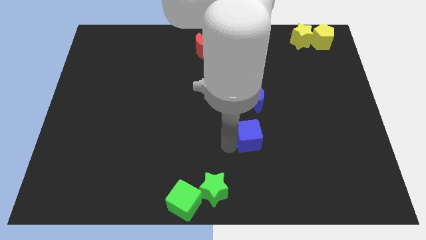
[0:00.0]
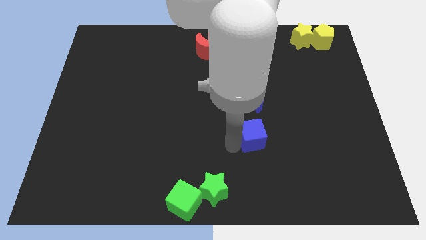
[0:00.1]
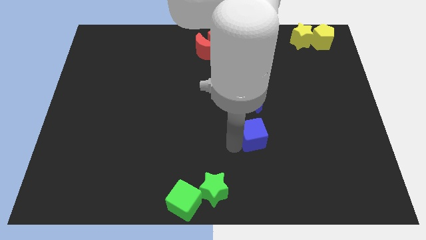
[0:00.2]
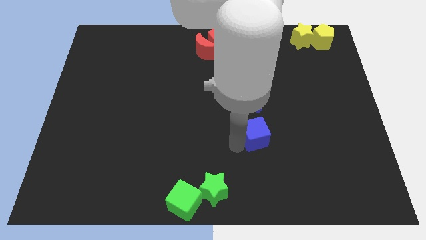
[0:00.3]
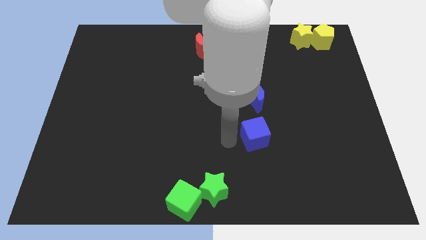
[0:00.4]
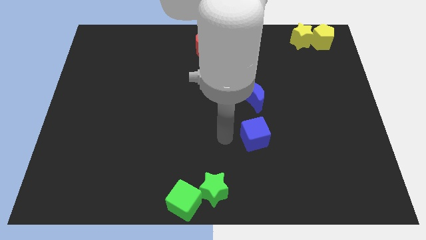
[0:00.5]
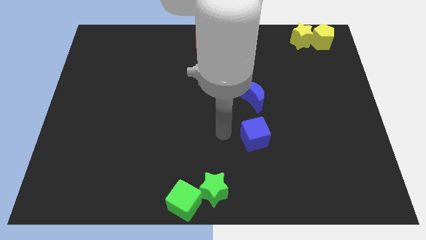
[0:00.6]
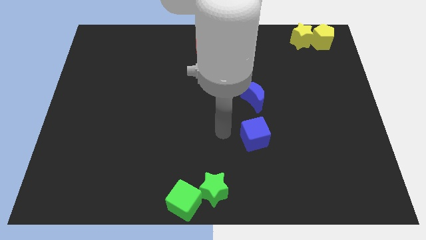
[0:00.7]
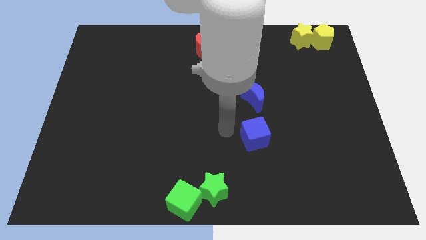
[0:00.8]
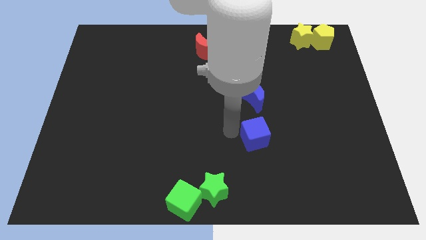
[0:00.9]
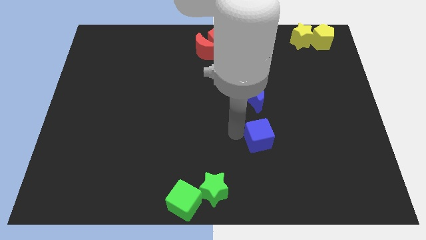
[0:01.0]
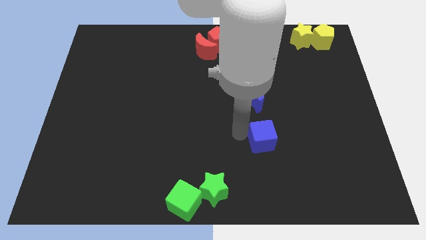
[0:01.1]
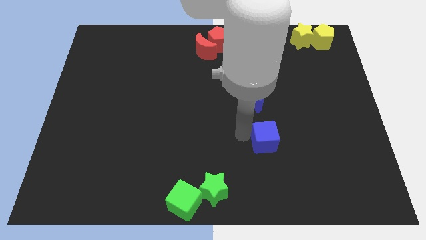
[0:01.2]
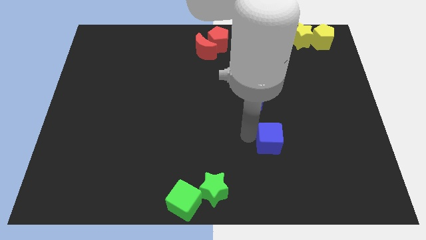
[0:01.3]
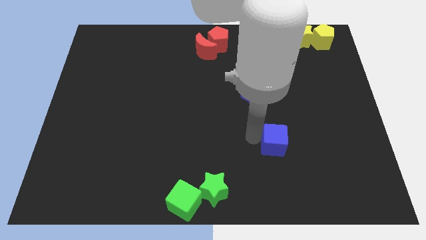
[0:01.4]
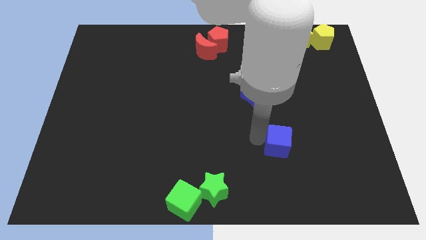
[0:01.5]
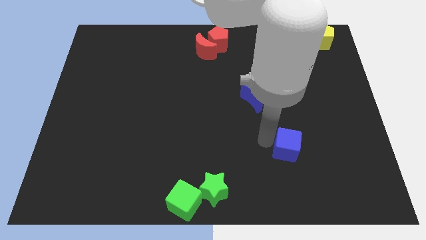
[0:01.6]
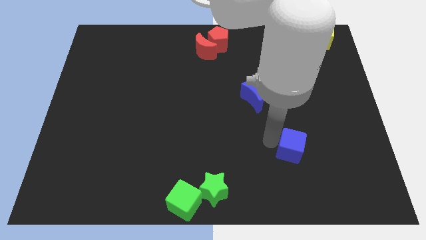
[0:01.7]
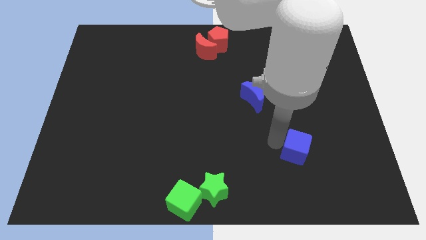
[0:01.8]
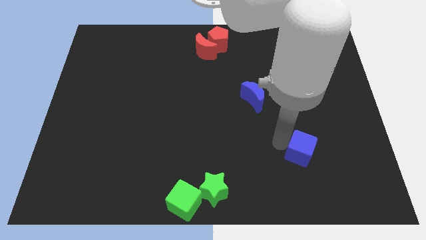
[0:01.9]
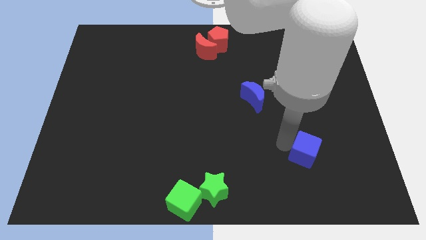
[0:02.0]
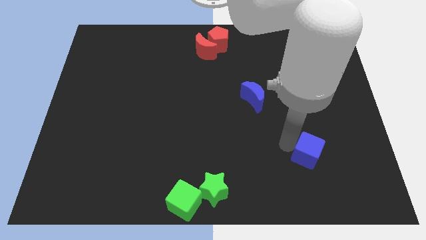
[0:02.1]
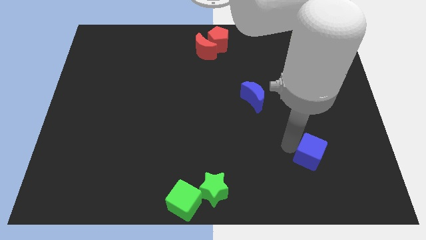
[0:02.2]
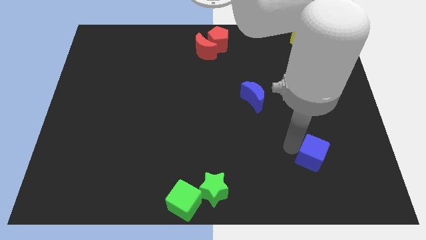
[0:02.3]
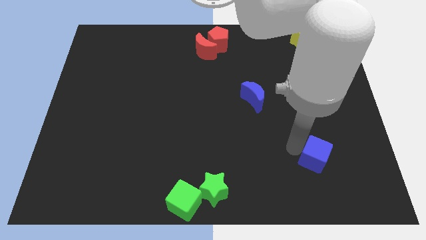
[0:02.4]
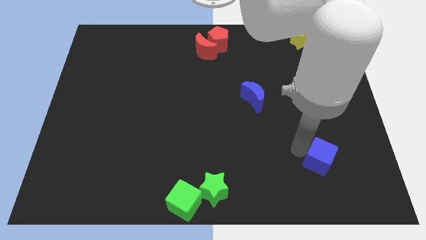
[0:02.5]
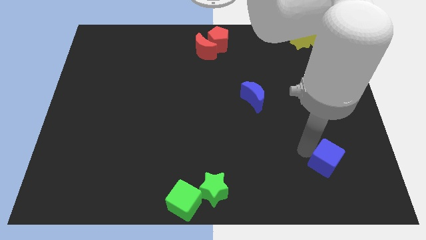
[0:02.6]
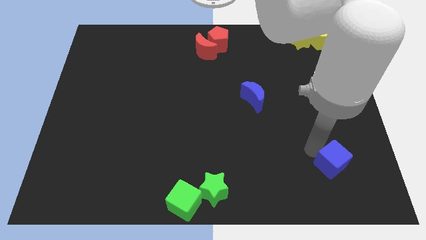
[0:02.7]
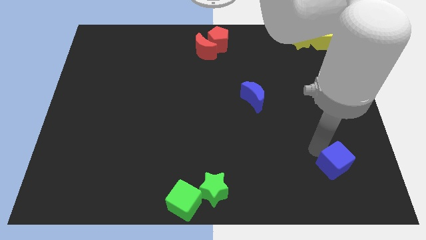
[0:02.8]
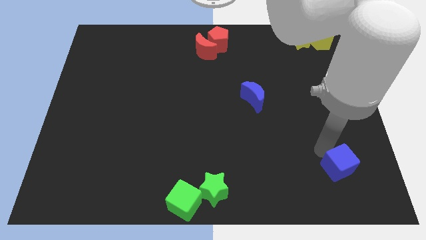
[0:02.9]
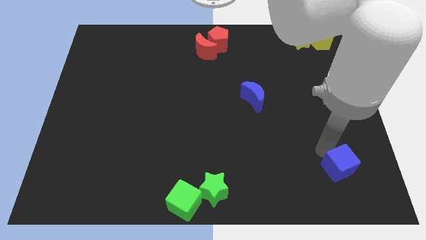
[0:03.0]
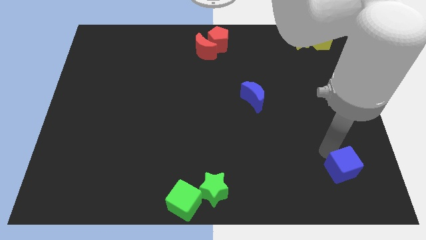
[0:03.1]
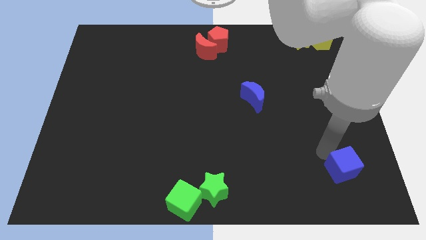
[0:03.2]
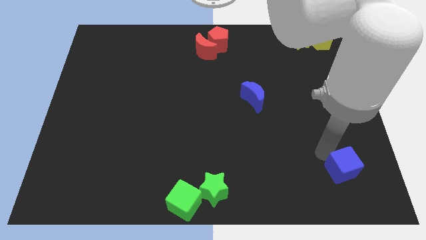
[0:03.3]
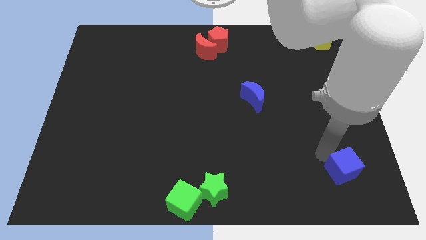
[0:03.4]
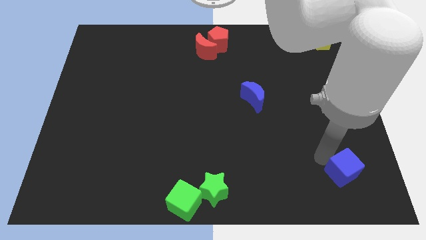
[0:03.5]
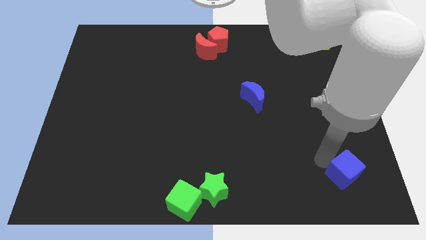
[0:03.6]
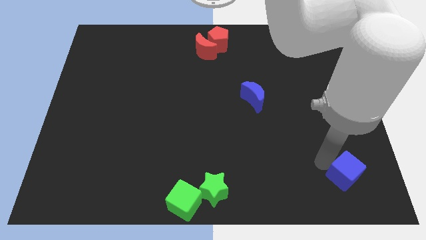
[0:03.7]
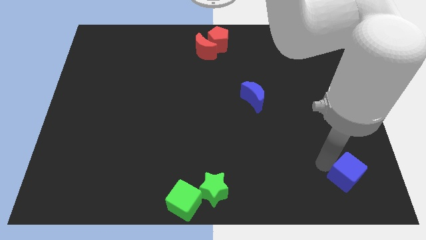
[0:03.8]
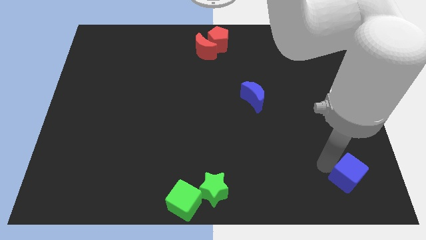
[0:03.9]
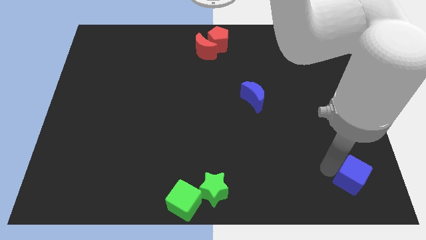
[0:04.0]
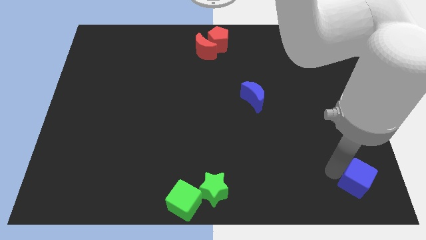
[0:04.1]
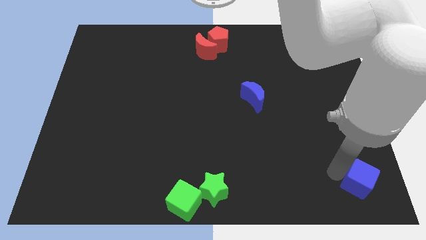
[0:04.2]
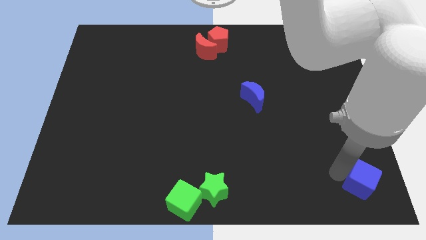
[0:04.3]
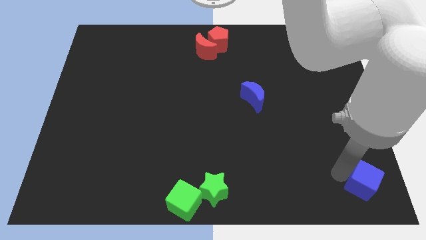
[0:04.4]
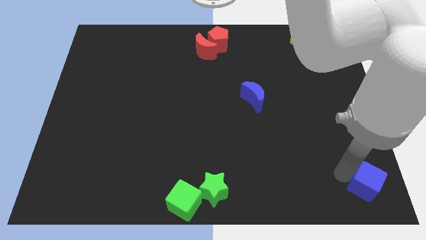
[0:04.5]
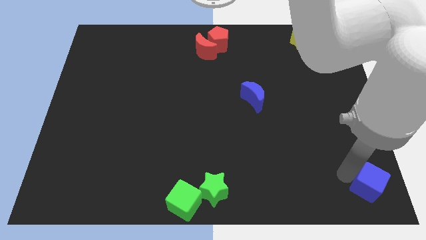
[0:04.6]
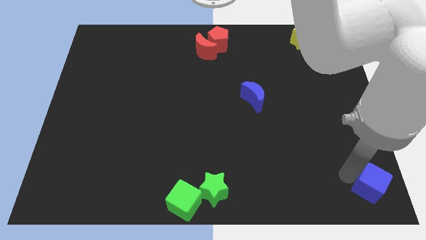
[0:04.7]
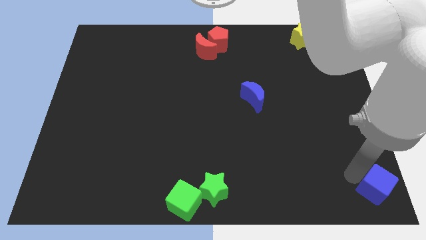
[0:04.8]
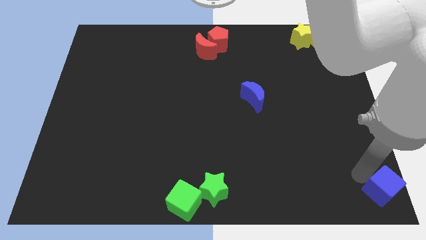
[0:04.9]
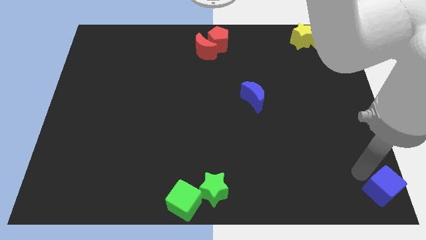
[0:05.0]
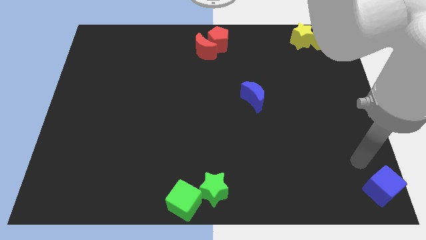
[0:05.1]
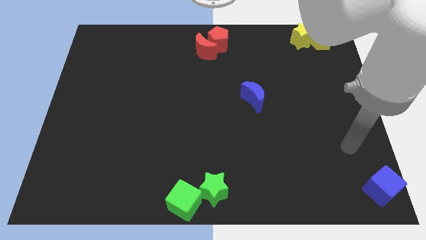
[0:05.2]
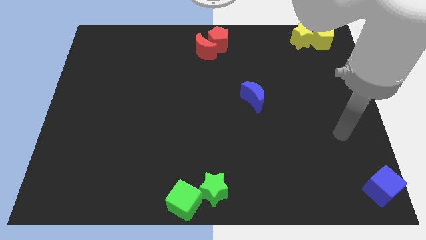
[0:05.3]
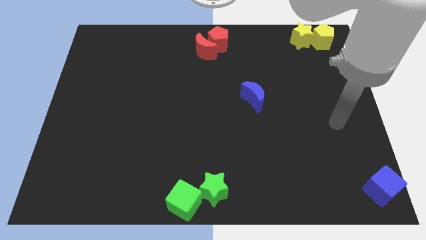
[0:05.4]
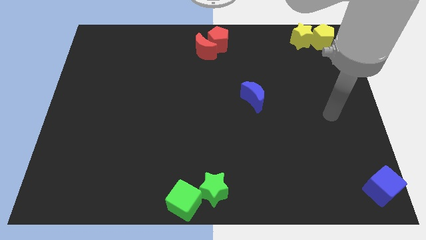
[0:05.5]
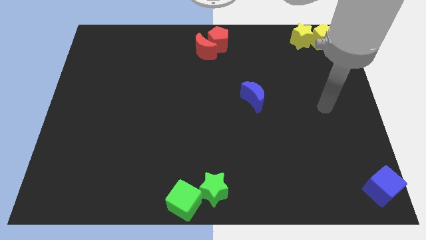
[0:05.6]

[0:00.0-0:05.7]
push the blue cube to the bottom right corner

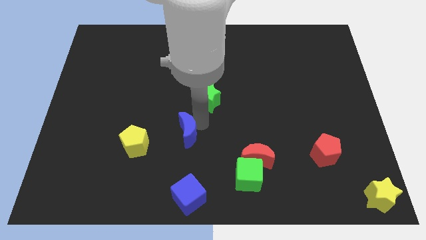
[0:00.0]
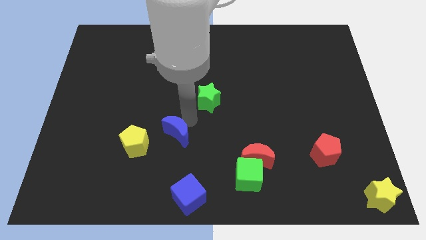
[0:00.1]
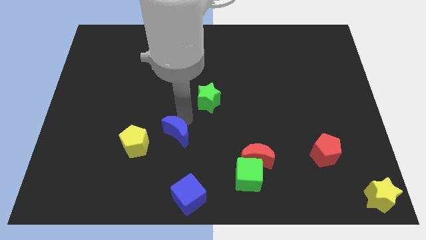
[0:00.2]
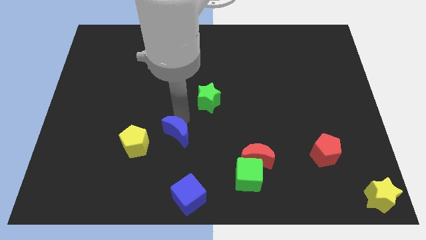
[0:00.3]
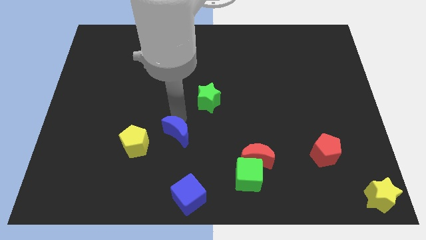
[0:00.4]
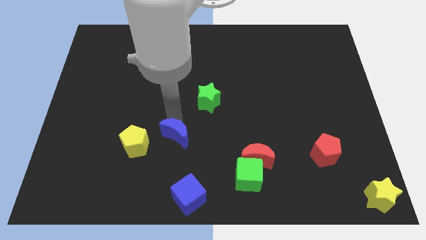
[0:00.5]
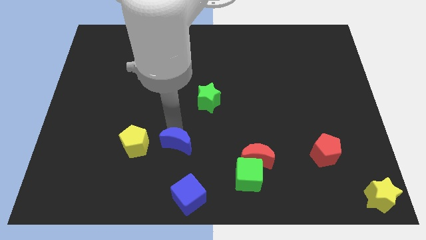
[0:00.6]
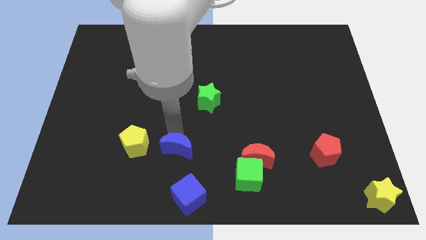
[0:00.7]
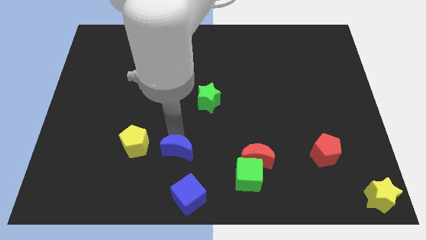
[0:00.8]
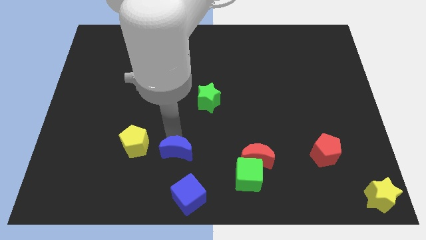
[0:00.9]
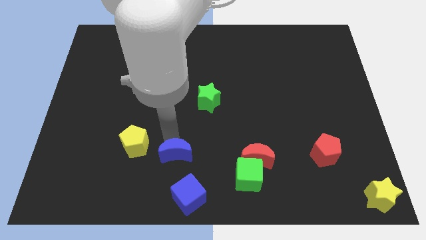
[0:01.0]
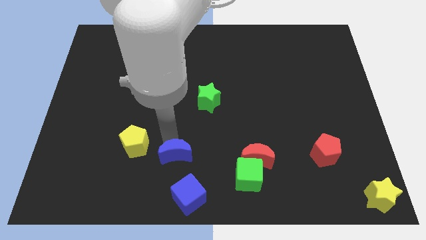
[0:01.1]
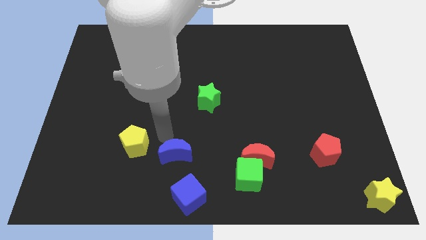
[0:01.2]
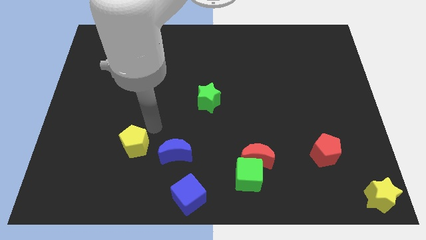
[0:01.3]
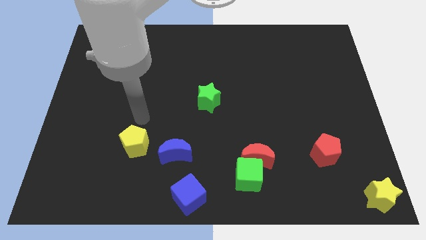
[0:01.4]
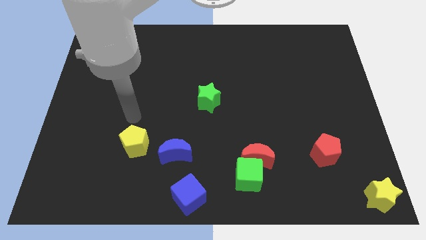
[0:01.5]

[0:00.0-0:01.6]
slide the blue moon horizontally to the left side of the red crescent

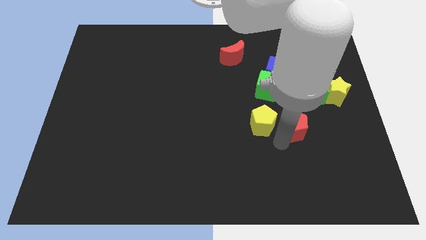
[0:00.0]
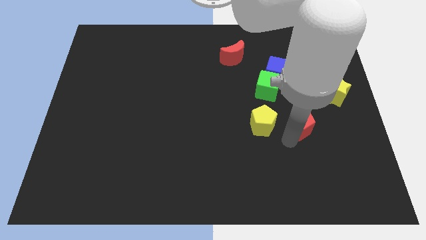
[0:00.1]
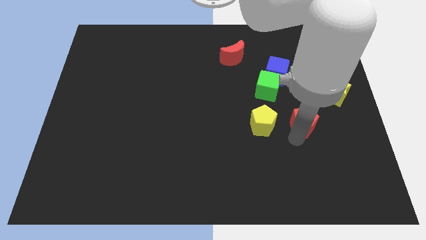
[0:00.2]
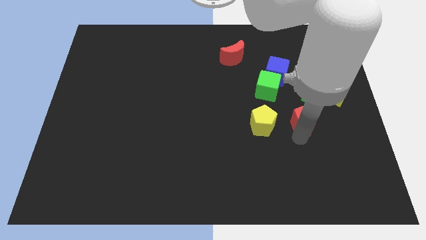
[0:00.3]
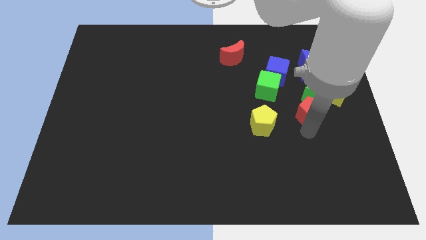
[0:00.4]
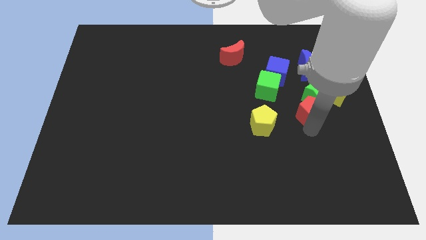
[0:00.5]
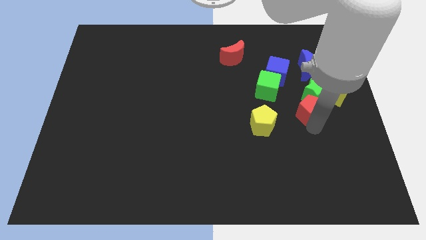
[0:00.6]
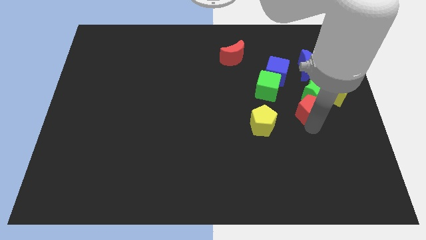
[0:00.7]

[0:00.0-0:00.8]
move the red pentagon below the green star

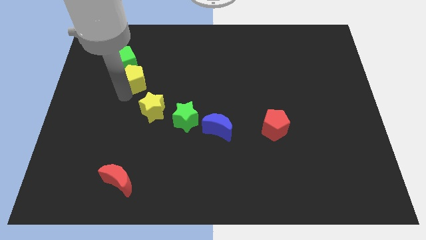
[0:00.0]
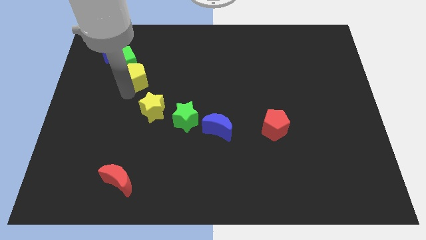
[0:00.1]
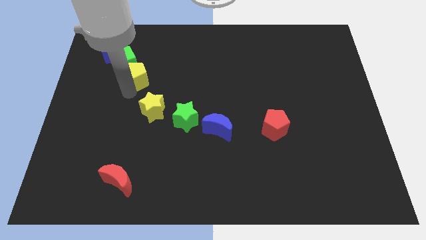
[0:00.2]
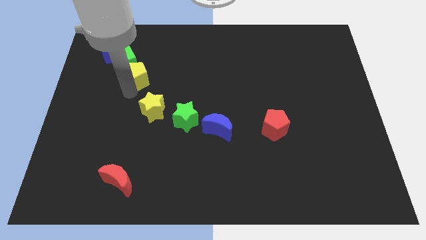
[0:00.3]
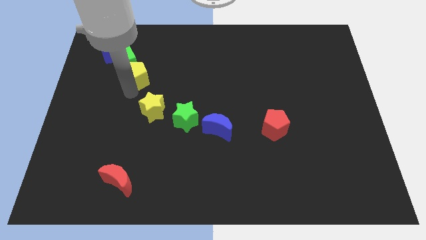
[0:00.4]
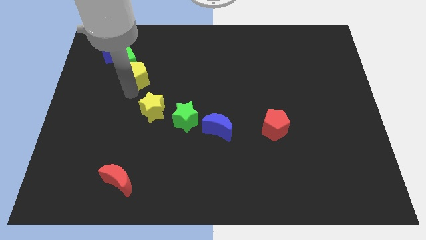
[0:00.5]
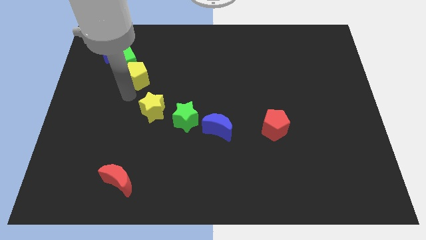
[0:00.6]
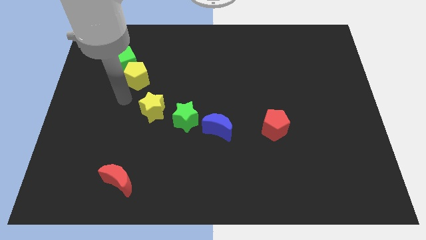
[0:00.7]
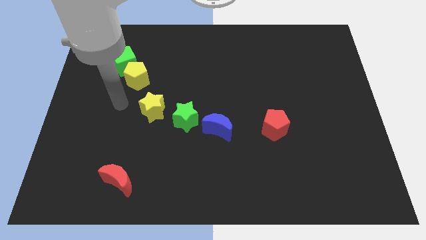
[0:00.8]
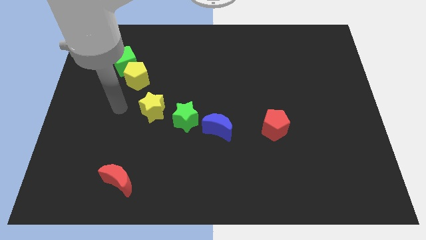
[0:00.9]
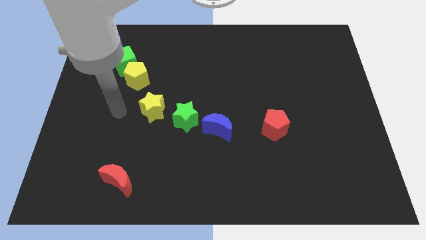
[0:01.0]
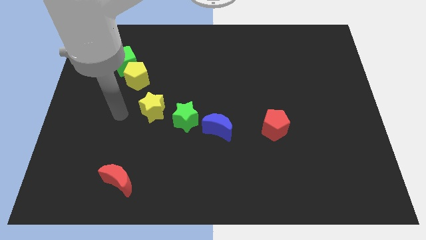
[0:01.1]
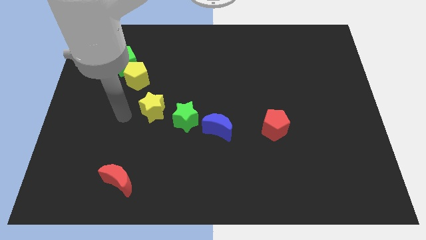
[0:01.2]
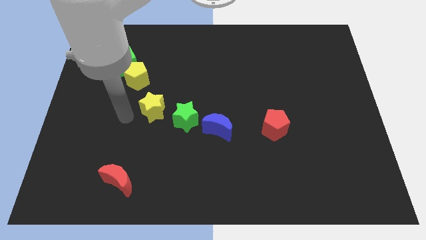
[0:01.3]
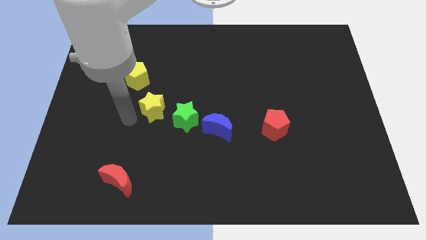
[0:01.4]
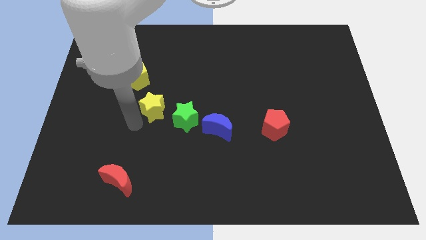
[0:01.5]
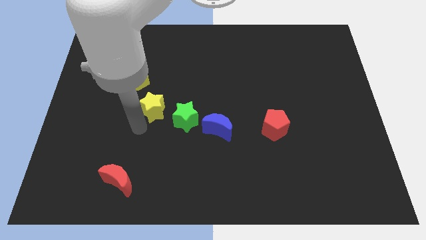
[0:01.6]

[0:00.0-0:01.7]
place the yellow pentagon below to the green cube
